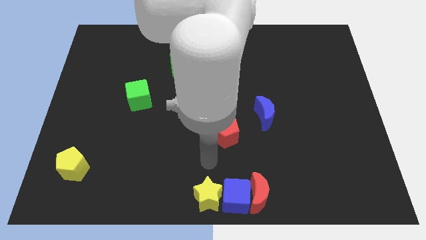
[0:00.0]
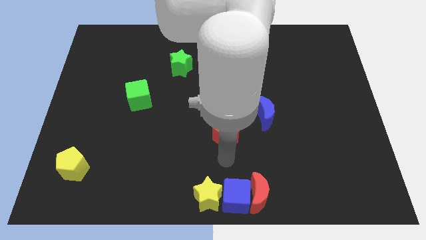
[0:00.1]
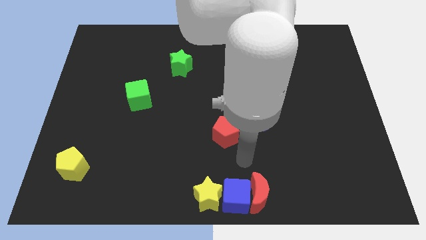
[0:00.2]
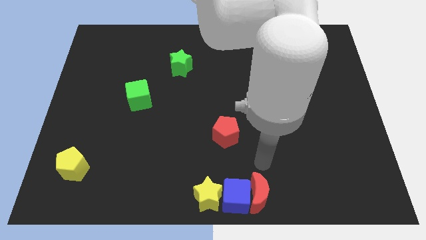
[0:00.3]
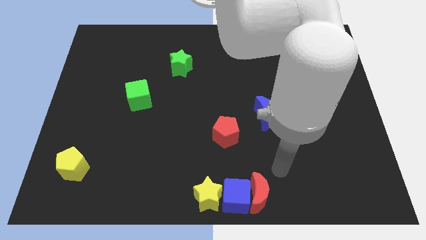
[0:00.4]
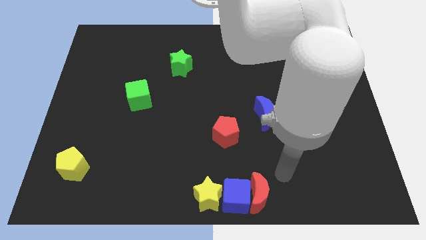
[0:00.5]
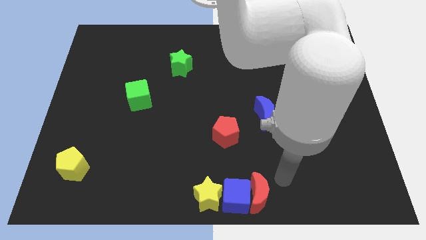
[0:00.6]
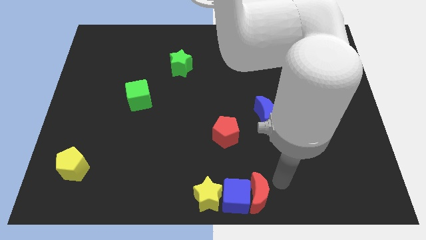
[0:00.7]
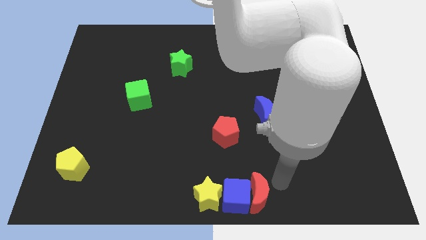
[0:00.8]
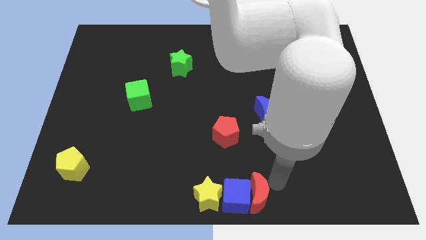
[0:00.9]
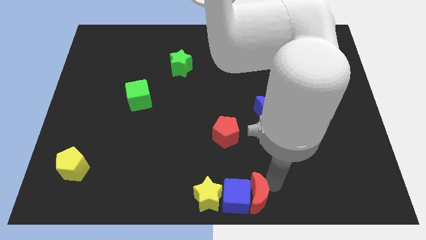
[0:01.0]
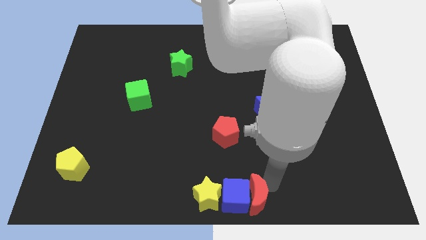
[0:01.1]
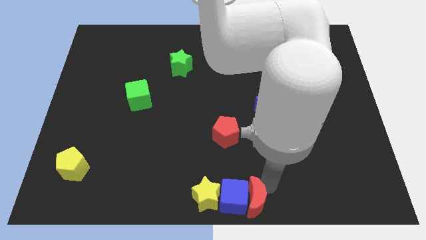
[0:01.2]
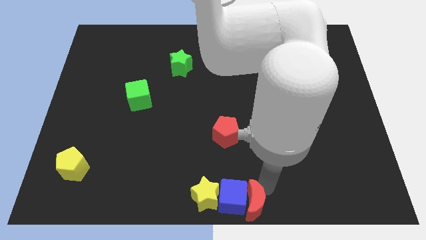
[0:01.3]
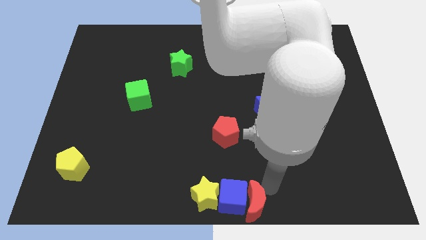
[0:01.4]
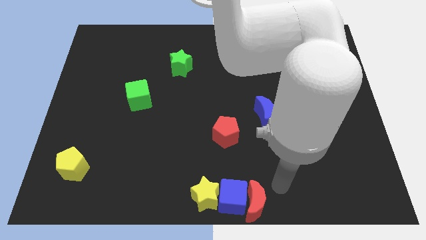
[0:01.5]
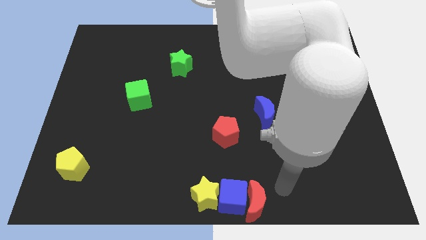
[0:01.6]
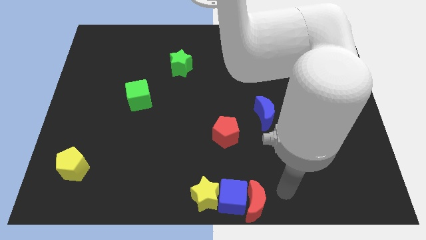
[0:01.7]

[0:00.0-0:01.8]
push red moon in blue cube

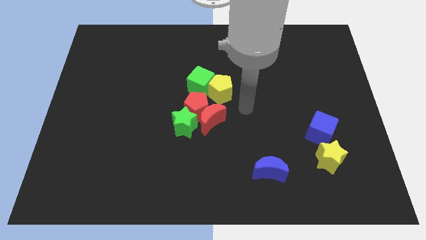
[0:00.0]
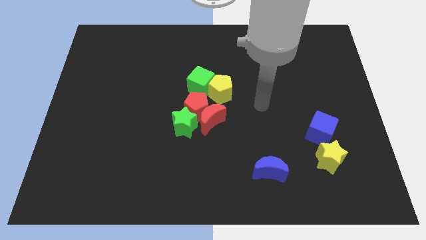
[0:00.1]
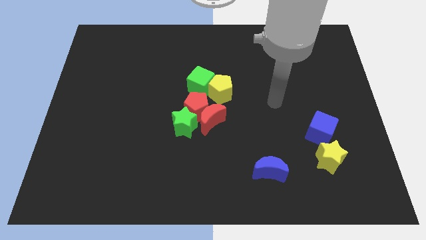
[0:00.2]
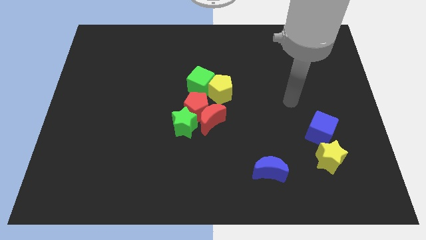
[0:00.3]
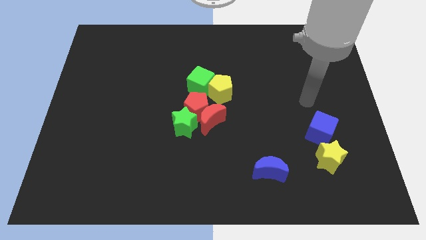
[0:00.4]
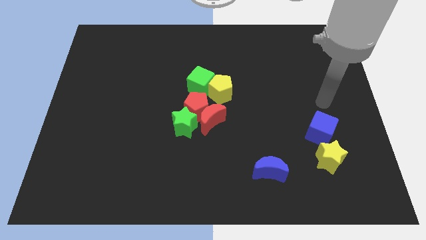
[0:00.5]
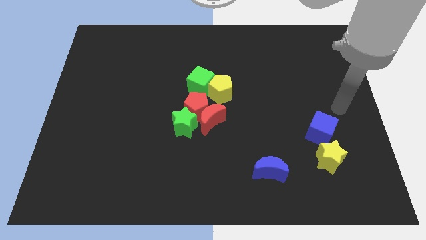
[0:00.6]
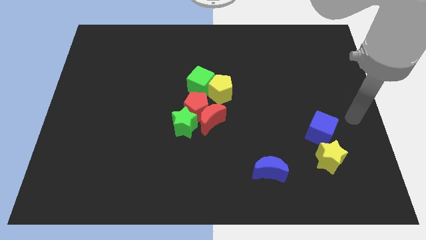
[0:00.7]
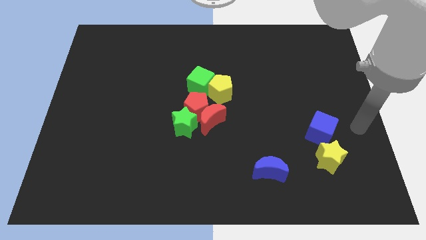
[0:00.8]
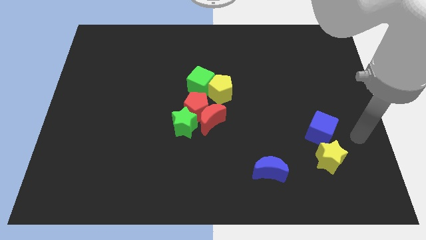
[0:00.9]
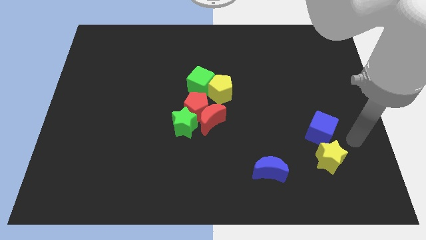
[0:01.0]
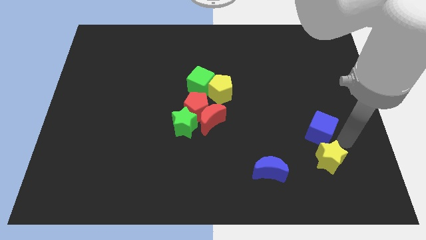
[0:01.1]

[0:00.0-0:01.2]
point the arm to the right of the blue cube

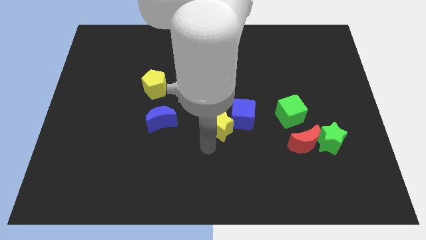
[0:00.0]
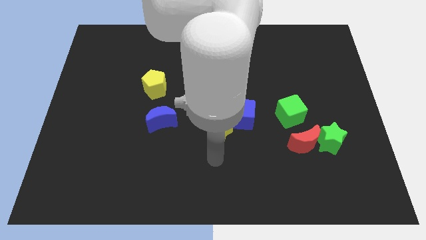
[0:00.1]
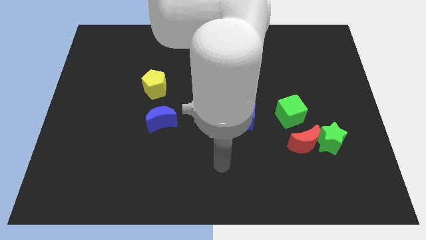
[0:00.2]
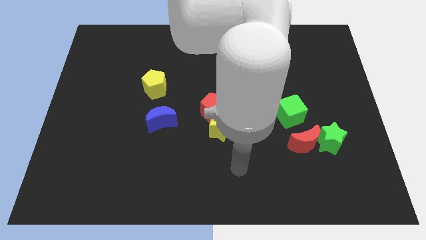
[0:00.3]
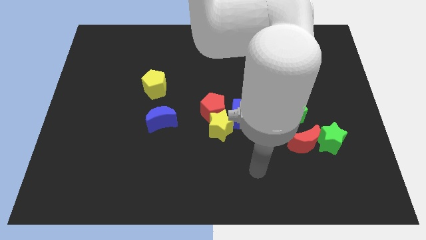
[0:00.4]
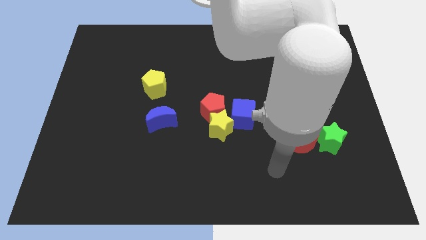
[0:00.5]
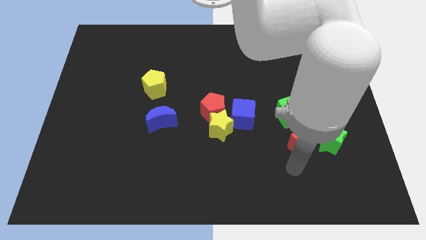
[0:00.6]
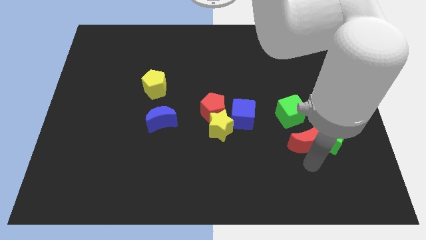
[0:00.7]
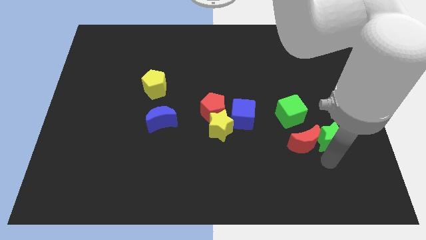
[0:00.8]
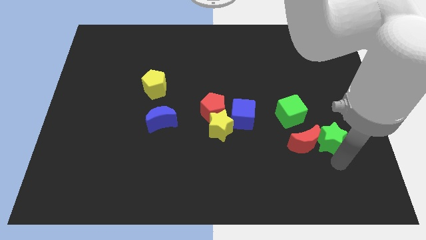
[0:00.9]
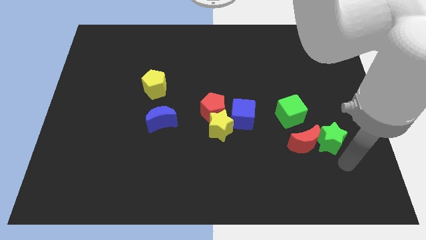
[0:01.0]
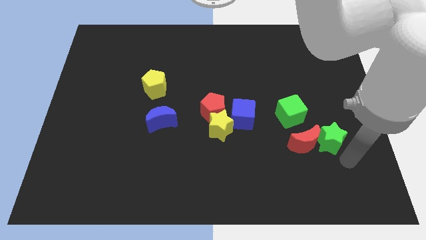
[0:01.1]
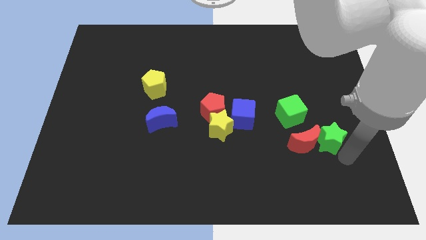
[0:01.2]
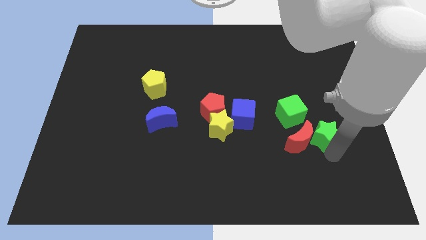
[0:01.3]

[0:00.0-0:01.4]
move the green star into the red moon

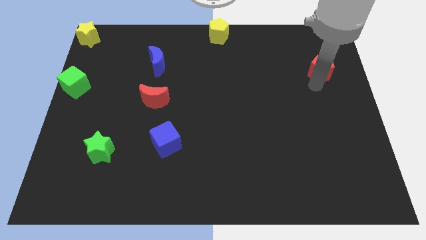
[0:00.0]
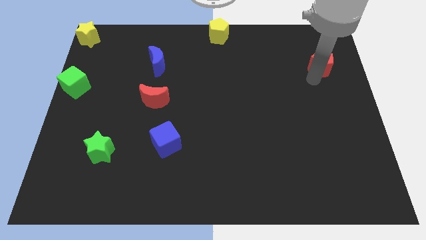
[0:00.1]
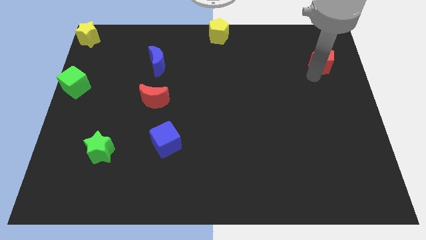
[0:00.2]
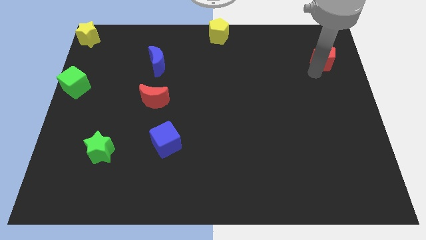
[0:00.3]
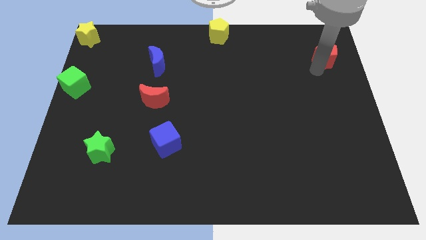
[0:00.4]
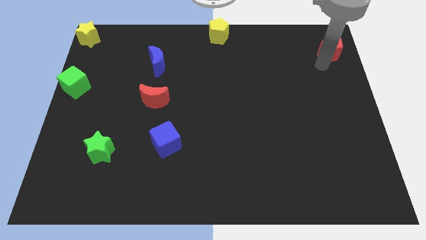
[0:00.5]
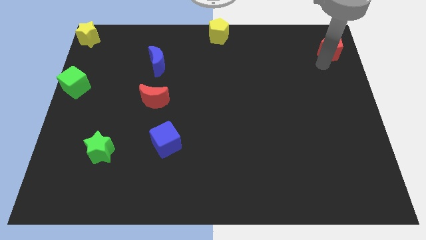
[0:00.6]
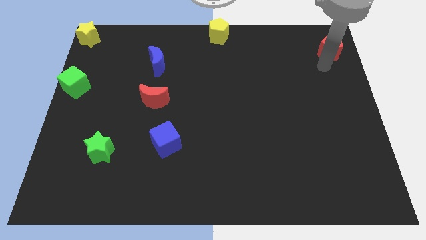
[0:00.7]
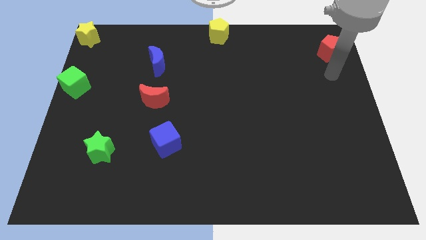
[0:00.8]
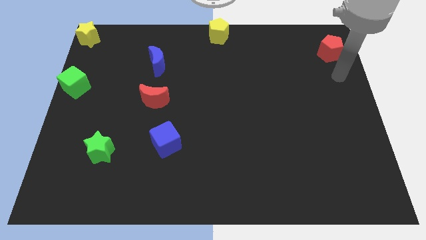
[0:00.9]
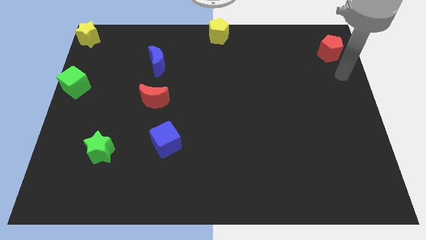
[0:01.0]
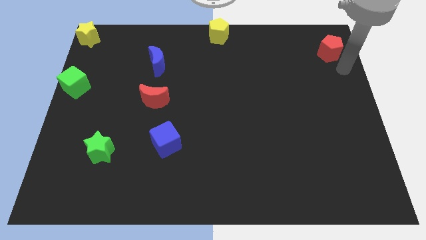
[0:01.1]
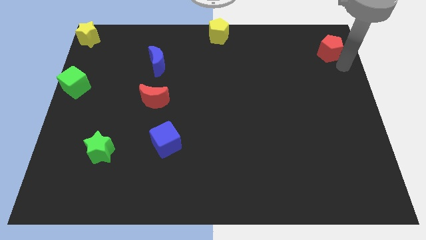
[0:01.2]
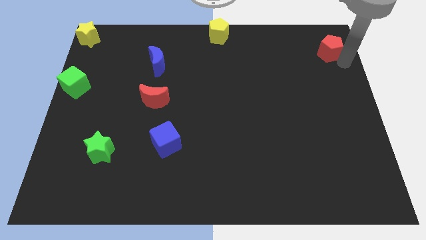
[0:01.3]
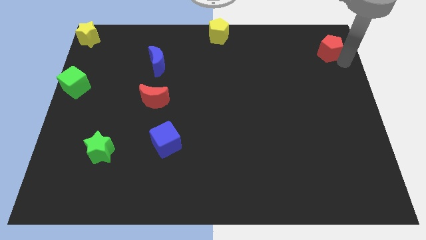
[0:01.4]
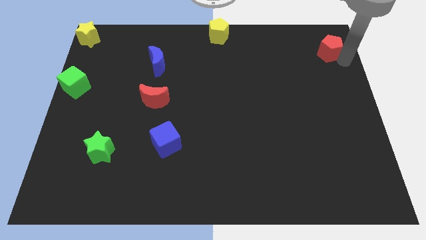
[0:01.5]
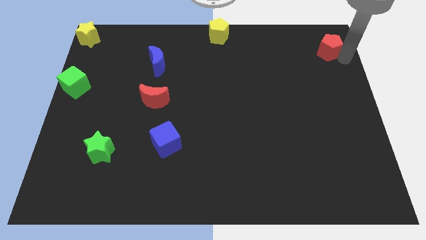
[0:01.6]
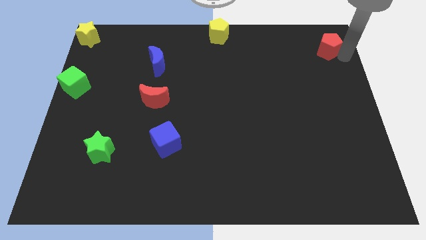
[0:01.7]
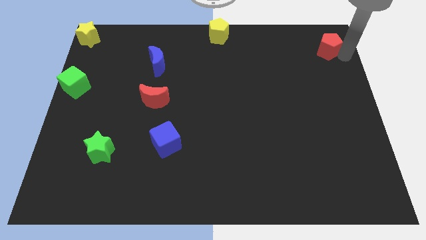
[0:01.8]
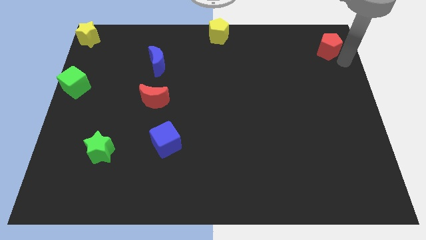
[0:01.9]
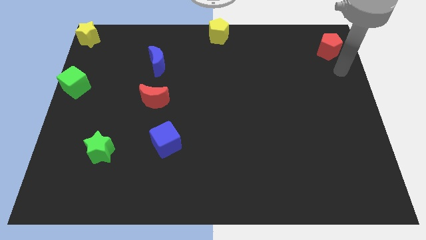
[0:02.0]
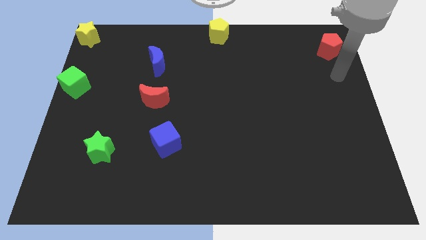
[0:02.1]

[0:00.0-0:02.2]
place the red pentagon at the top right corner of the board

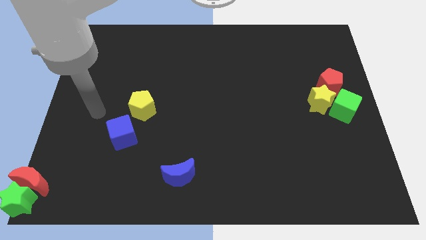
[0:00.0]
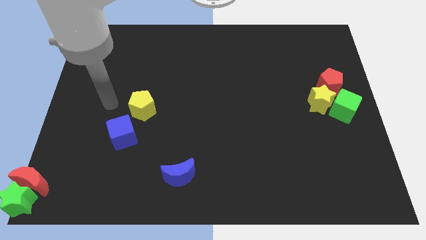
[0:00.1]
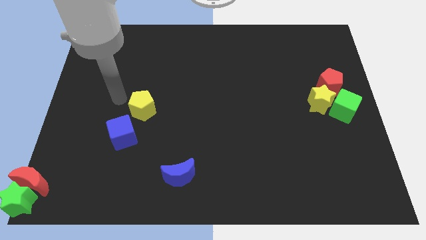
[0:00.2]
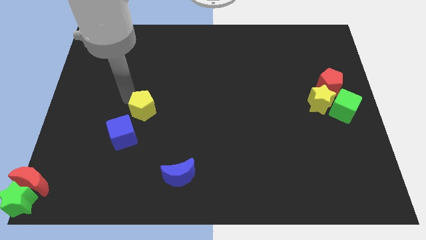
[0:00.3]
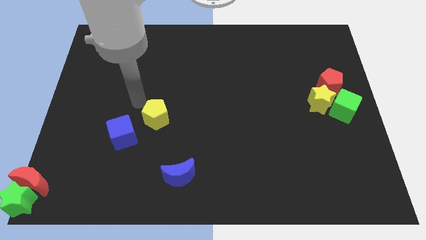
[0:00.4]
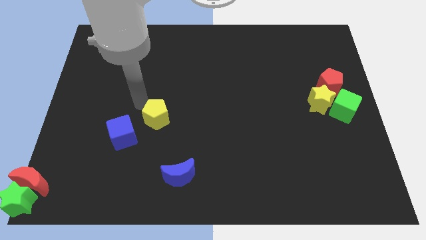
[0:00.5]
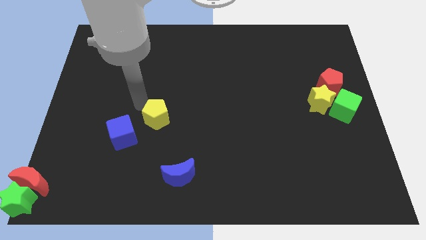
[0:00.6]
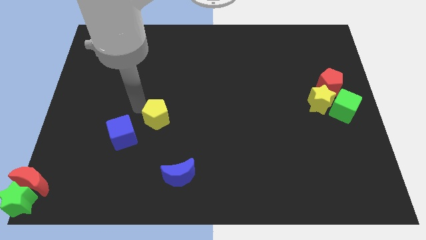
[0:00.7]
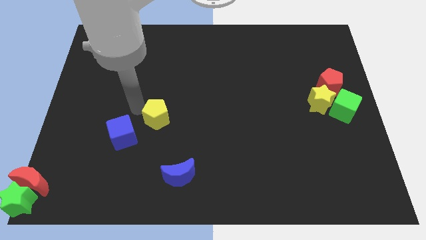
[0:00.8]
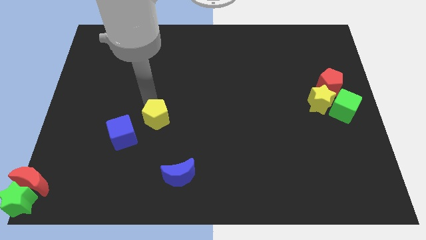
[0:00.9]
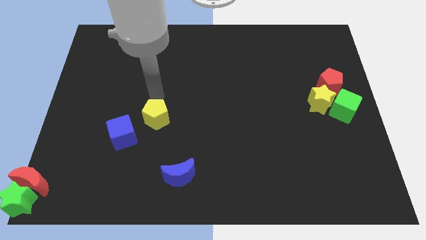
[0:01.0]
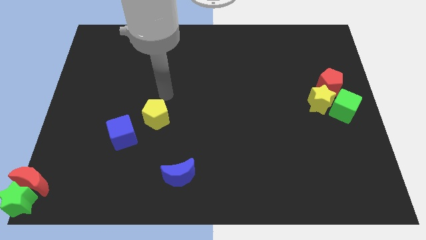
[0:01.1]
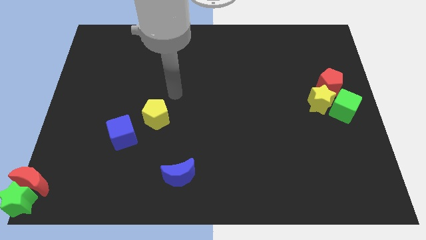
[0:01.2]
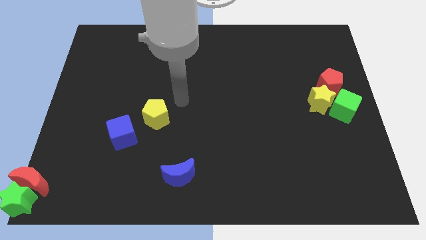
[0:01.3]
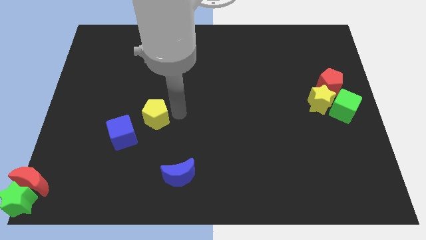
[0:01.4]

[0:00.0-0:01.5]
push yellow pentagon above blue crescent

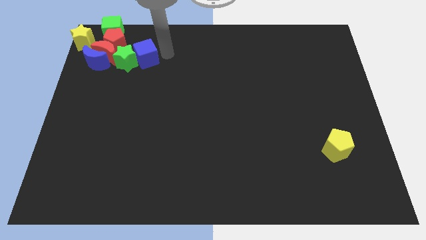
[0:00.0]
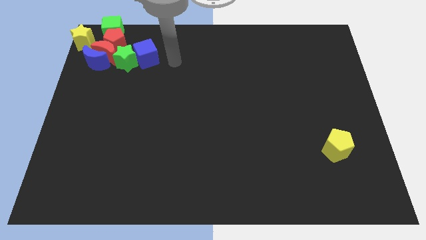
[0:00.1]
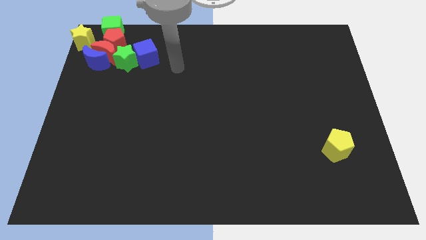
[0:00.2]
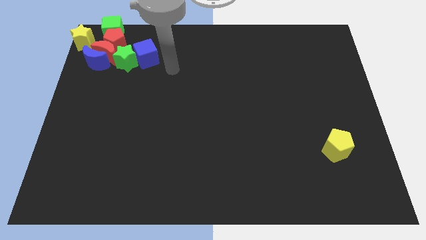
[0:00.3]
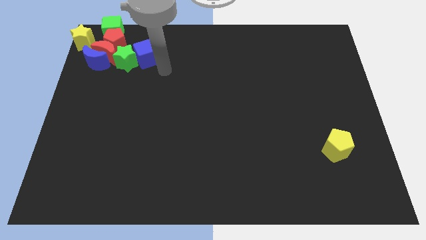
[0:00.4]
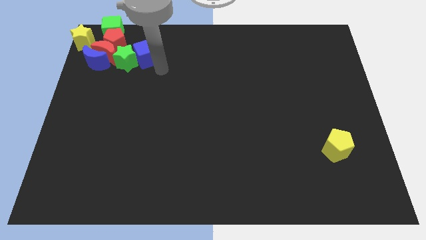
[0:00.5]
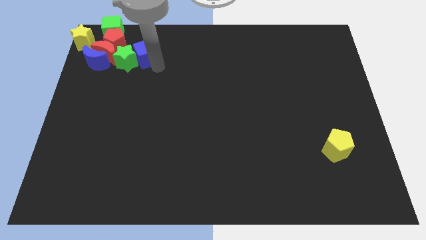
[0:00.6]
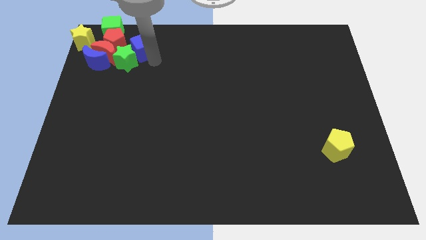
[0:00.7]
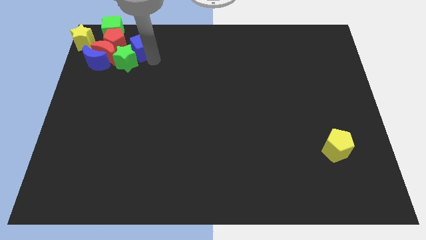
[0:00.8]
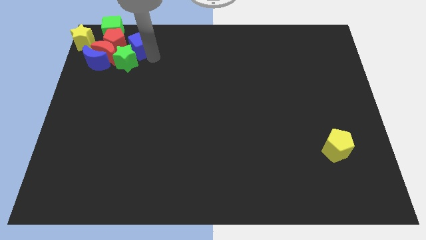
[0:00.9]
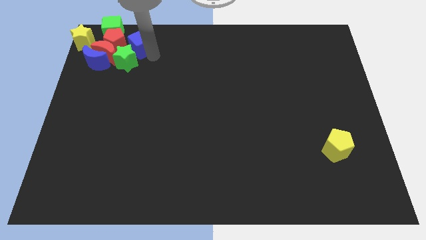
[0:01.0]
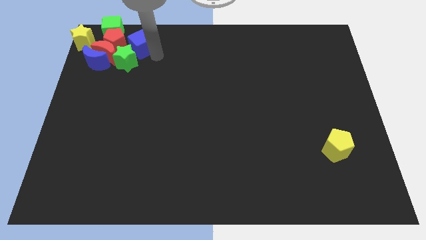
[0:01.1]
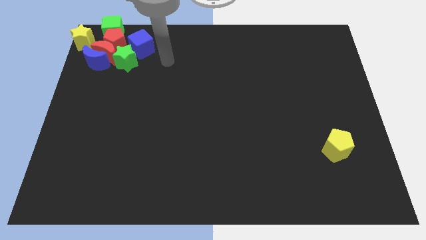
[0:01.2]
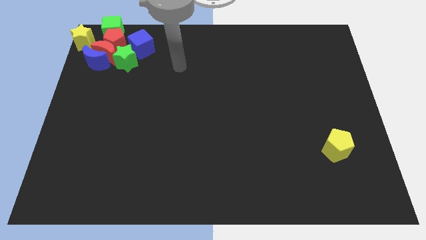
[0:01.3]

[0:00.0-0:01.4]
move the blue cube towards the red pentagon
